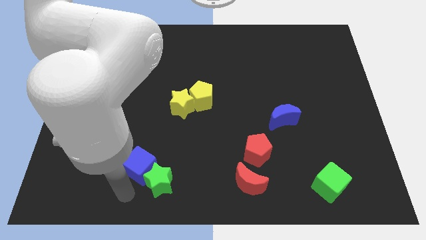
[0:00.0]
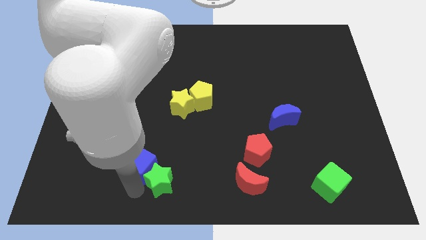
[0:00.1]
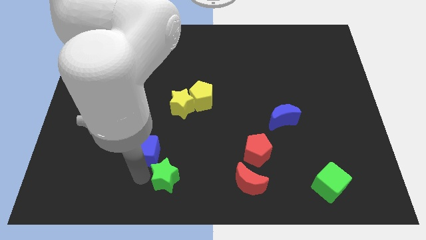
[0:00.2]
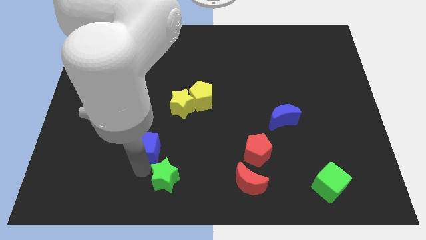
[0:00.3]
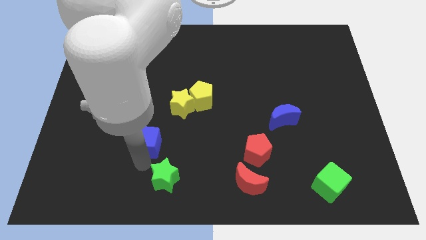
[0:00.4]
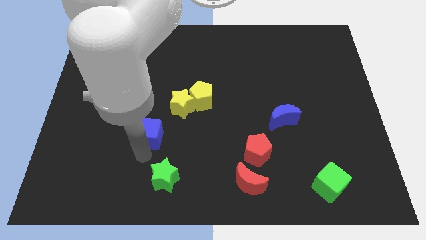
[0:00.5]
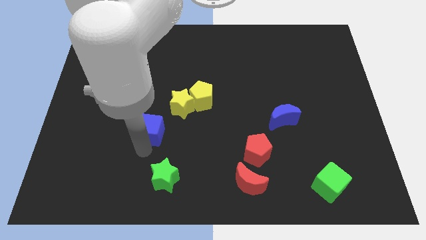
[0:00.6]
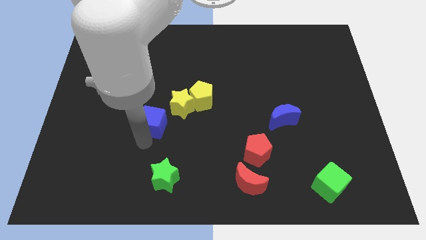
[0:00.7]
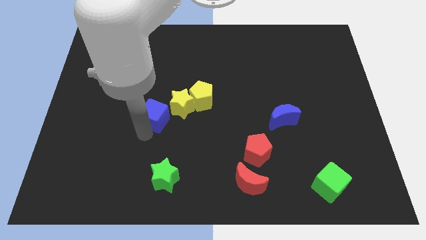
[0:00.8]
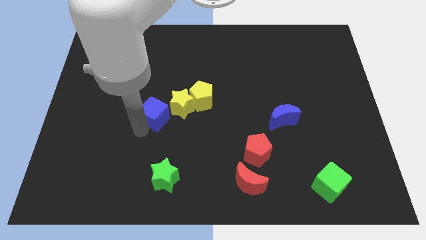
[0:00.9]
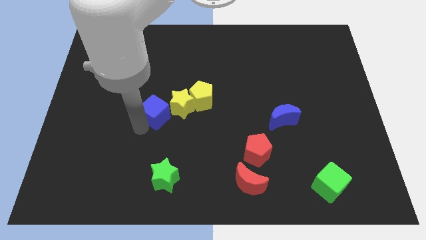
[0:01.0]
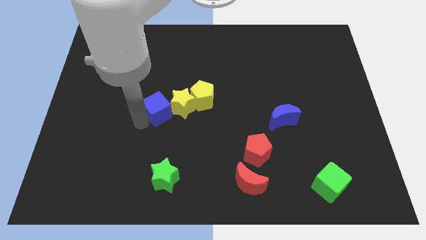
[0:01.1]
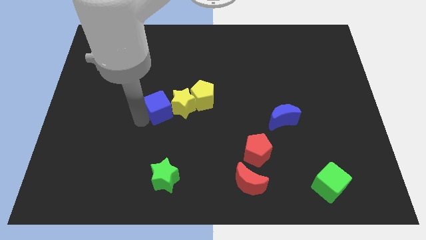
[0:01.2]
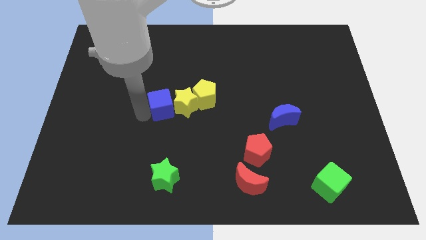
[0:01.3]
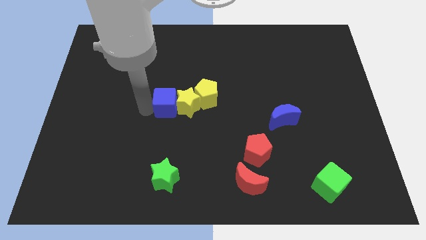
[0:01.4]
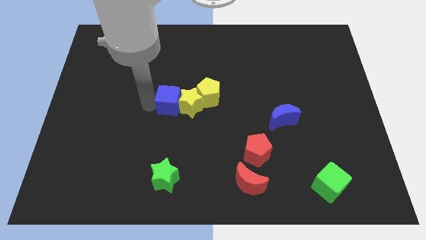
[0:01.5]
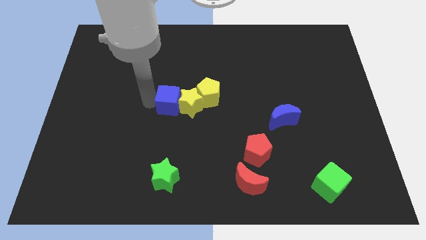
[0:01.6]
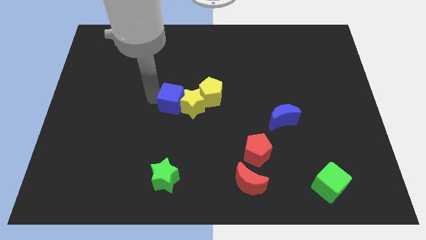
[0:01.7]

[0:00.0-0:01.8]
move blue cube beside yellow star

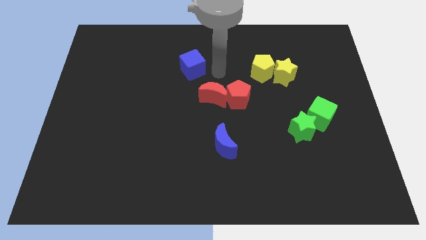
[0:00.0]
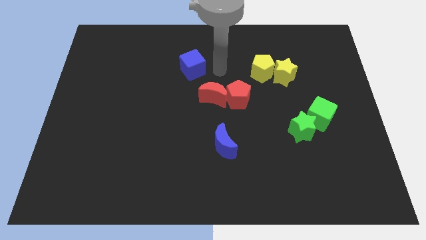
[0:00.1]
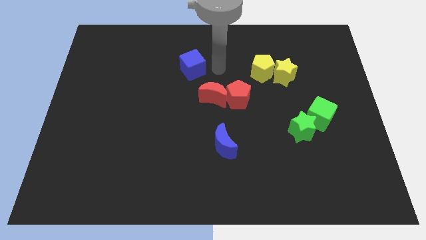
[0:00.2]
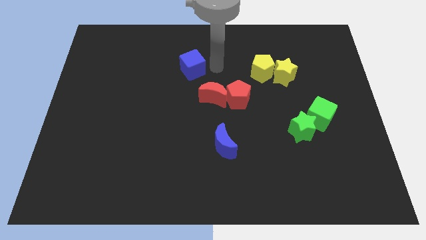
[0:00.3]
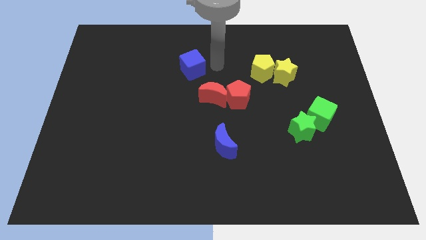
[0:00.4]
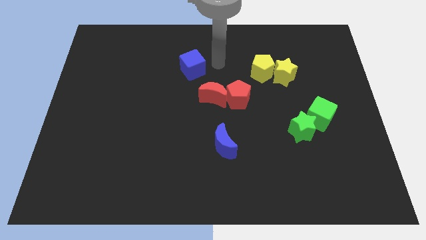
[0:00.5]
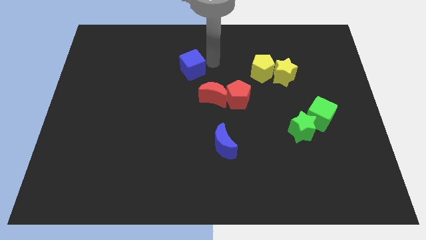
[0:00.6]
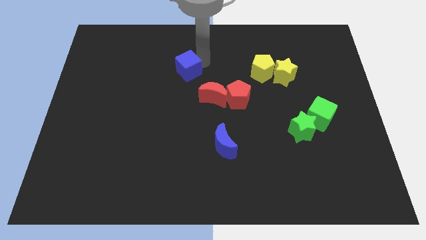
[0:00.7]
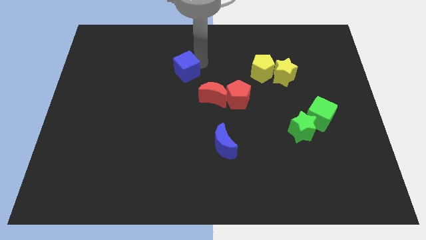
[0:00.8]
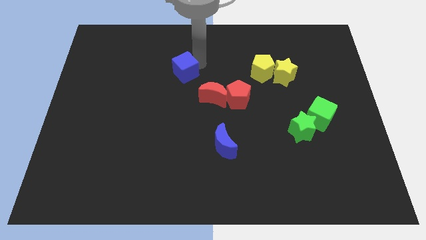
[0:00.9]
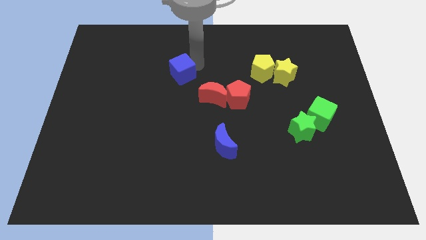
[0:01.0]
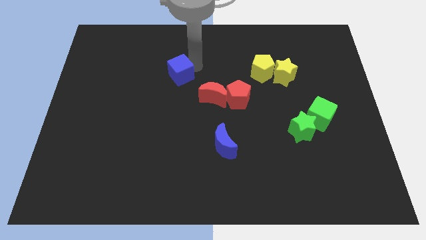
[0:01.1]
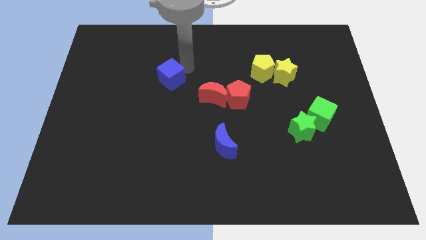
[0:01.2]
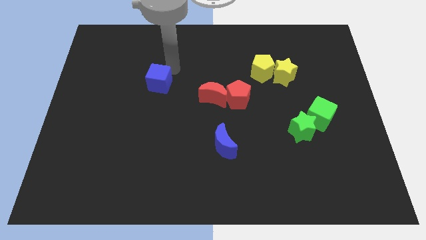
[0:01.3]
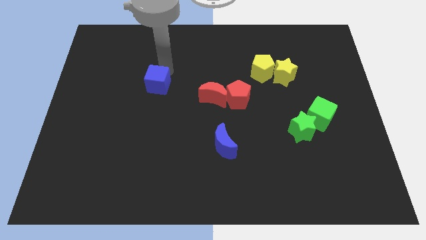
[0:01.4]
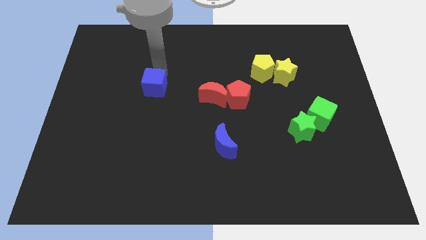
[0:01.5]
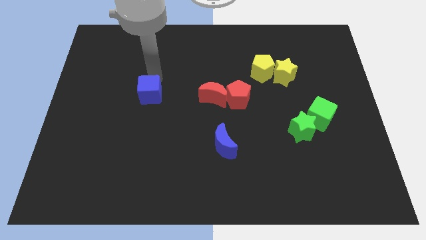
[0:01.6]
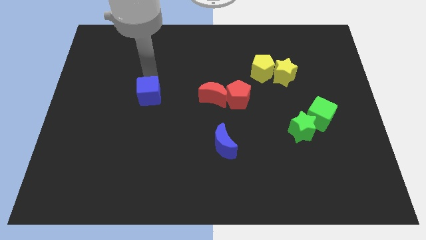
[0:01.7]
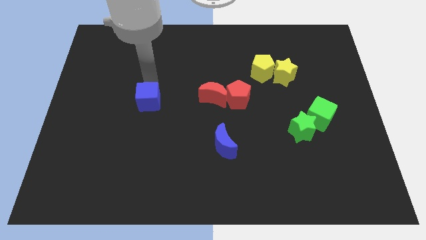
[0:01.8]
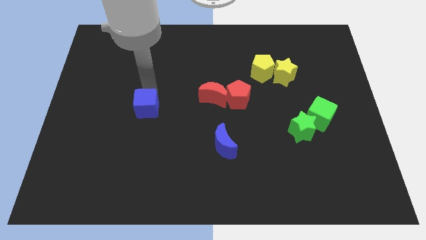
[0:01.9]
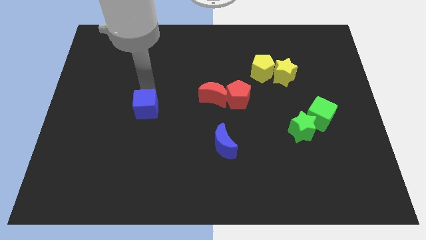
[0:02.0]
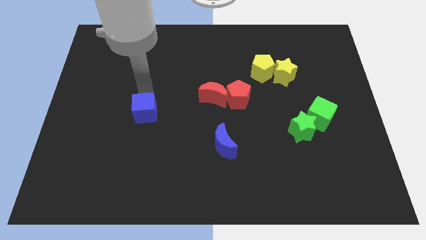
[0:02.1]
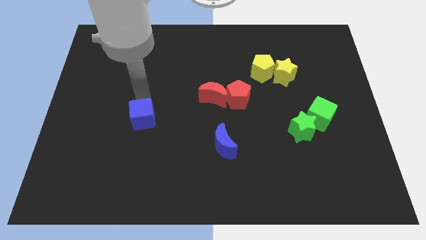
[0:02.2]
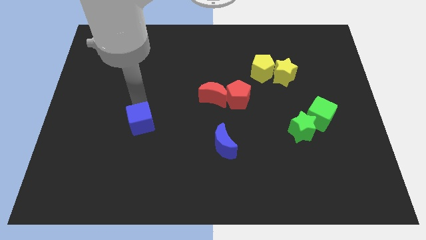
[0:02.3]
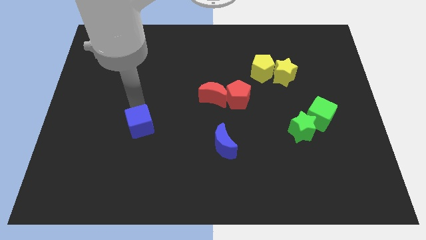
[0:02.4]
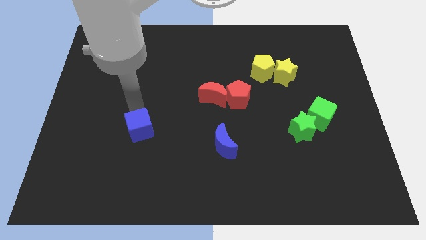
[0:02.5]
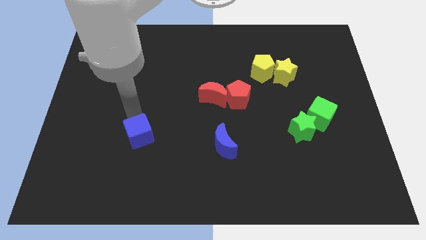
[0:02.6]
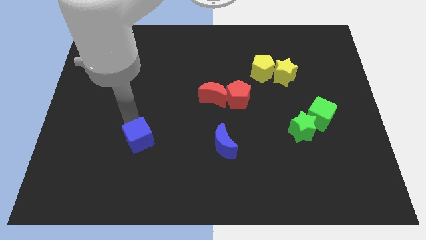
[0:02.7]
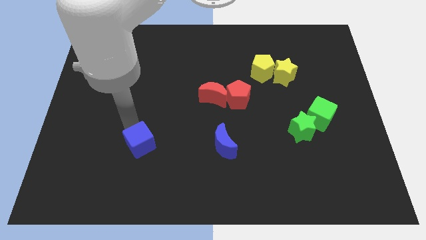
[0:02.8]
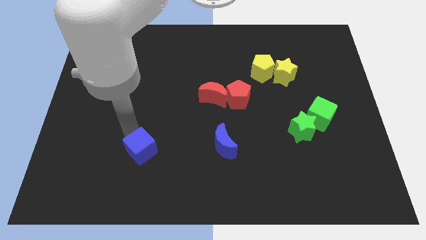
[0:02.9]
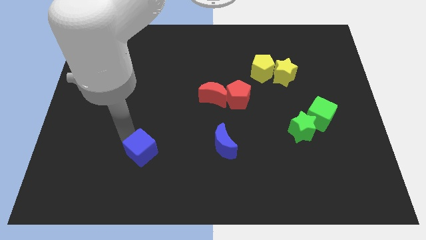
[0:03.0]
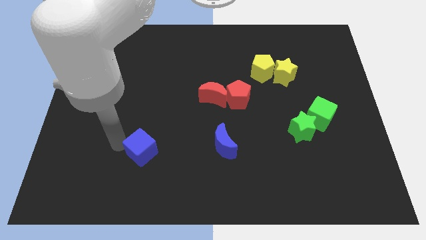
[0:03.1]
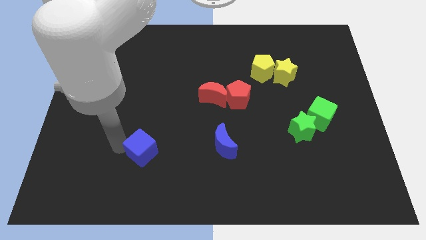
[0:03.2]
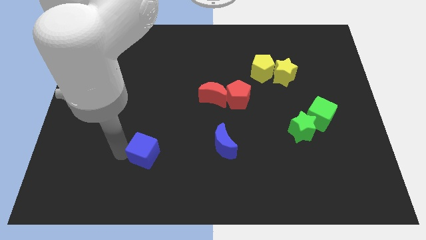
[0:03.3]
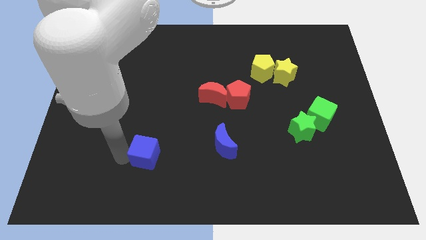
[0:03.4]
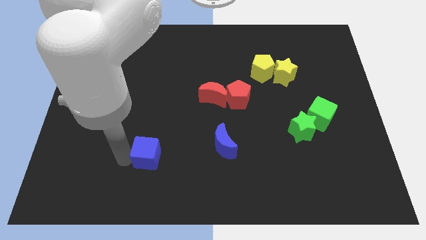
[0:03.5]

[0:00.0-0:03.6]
move the blue cube horizontally left to the blue moon

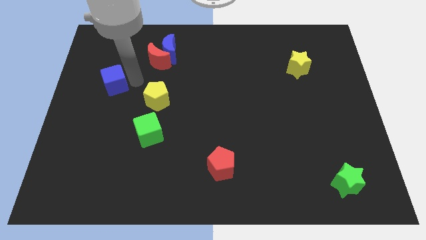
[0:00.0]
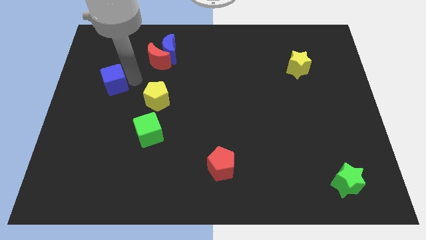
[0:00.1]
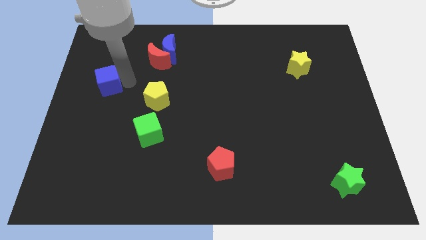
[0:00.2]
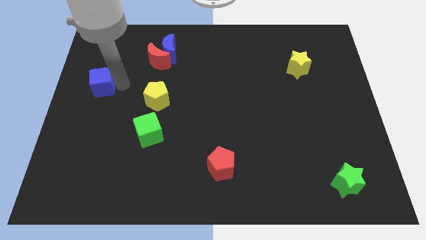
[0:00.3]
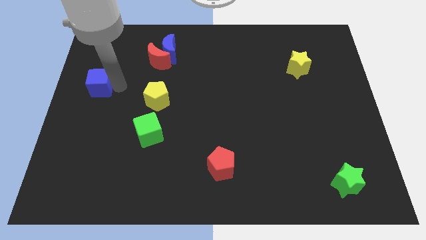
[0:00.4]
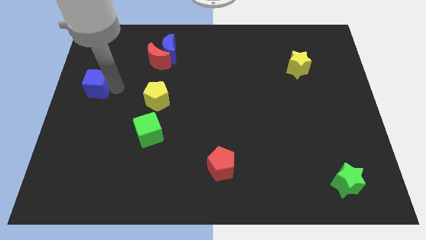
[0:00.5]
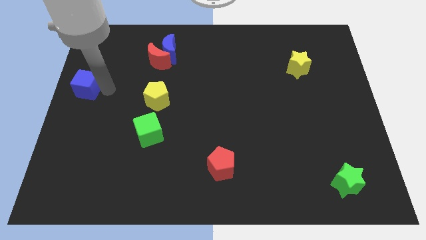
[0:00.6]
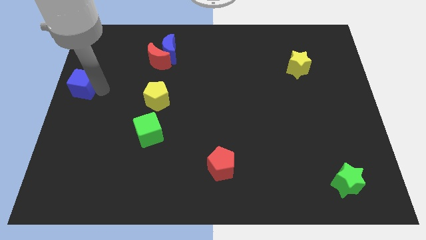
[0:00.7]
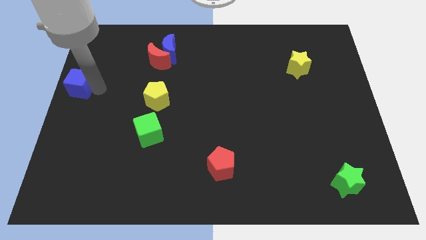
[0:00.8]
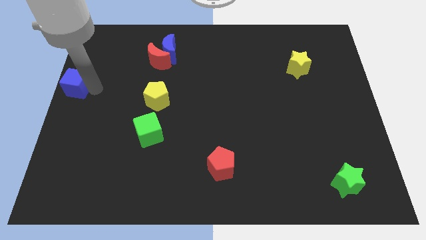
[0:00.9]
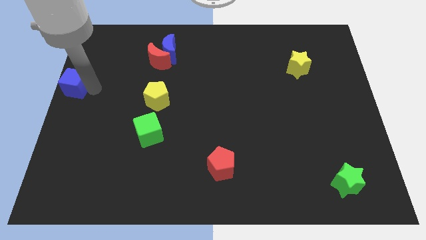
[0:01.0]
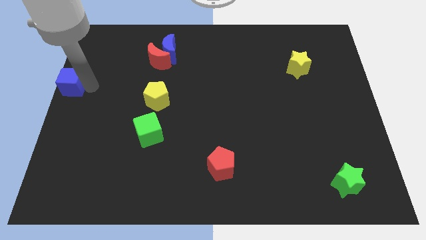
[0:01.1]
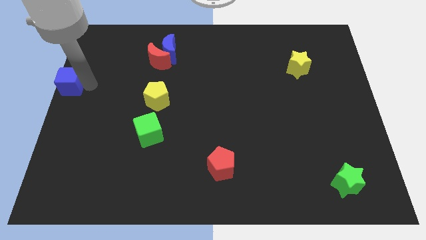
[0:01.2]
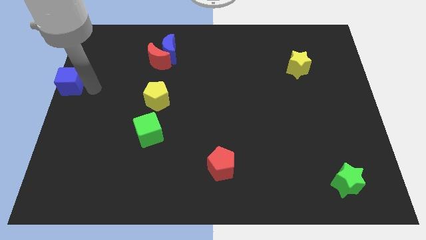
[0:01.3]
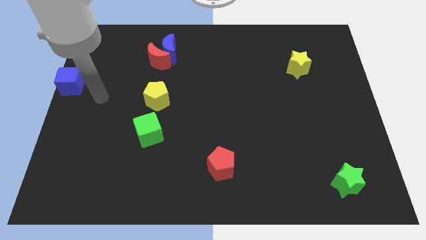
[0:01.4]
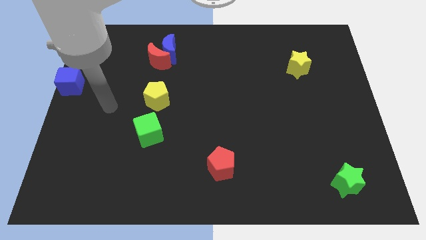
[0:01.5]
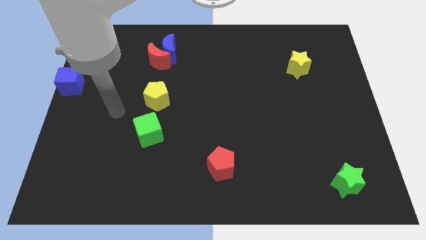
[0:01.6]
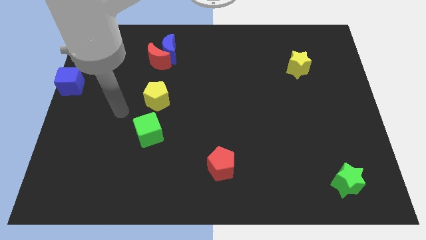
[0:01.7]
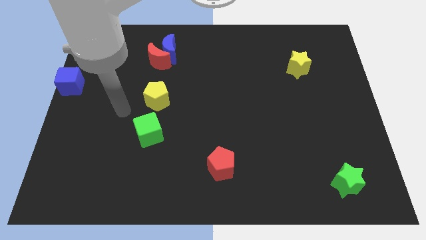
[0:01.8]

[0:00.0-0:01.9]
push blue cube to the left top center

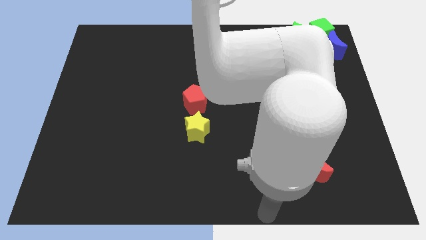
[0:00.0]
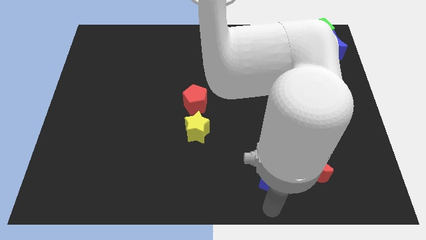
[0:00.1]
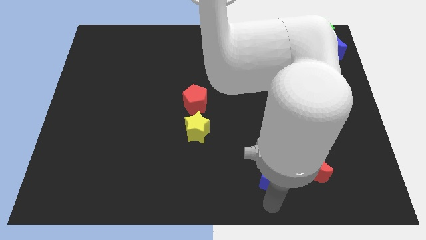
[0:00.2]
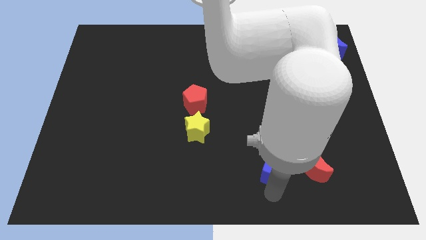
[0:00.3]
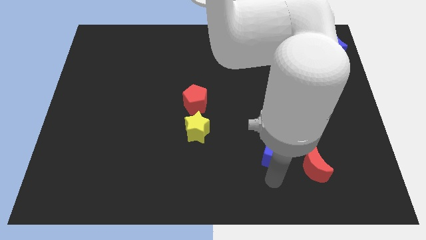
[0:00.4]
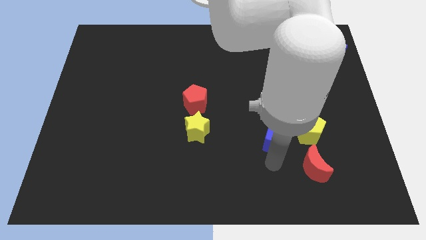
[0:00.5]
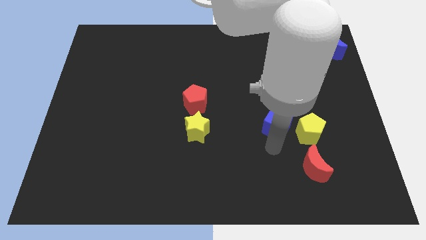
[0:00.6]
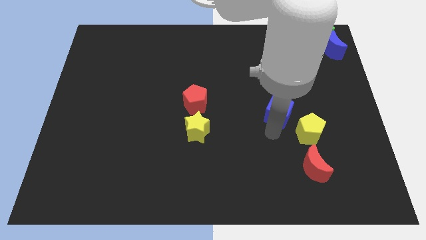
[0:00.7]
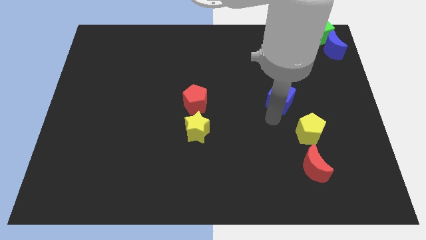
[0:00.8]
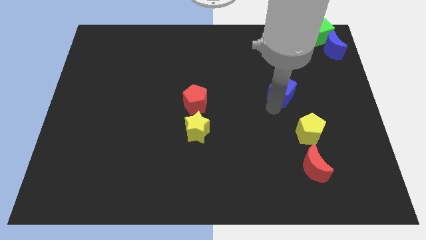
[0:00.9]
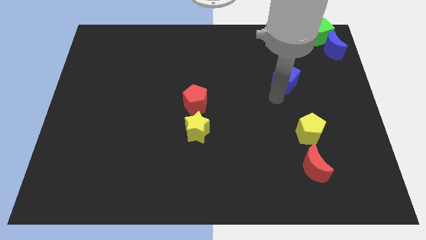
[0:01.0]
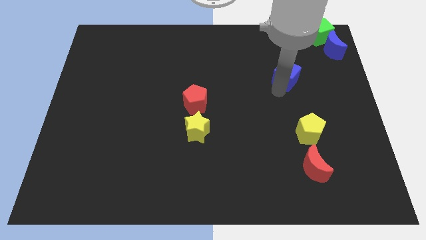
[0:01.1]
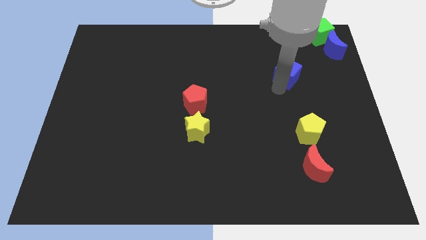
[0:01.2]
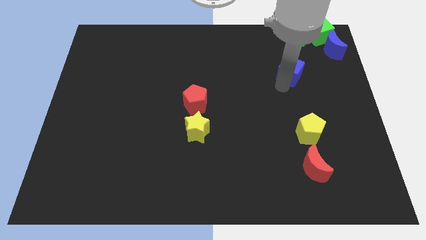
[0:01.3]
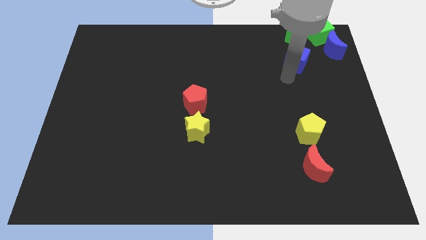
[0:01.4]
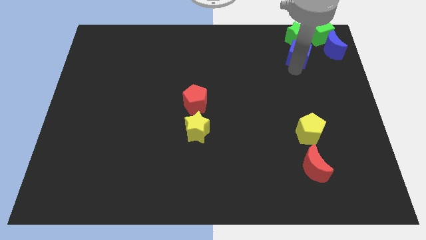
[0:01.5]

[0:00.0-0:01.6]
place blue cube below the group of blocks at the top right
